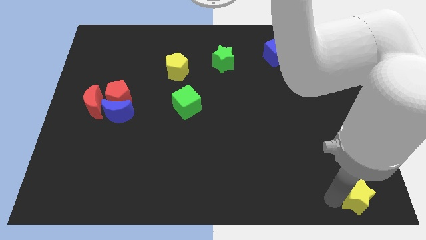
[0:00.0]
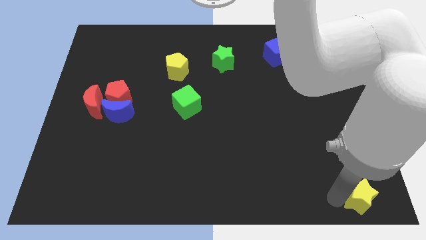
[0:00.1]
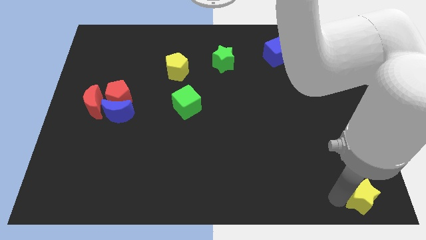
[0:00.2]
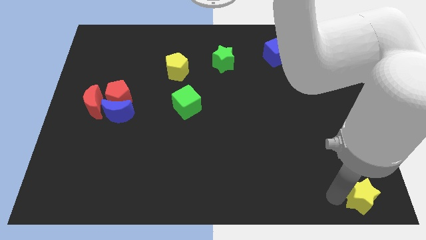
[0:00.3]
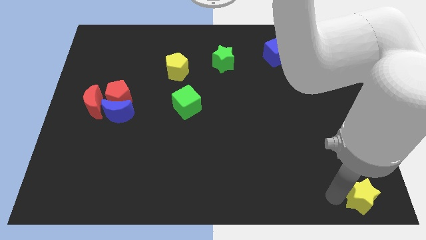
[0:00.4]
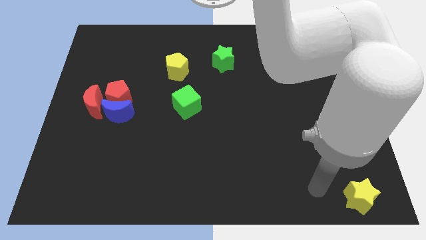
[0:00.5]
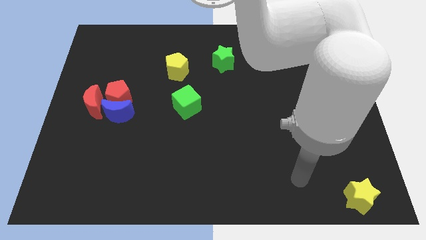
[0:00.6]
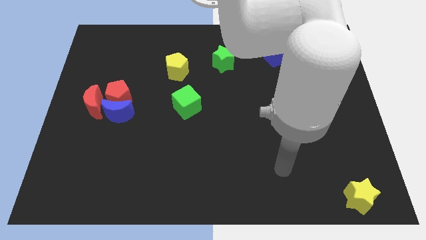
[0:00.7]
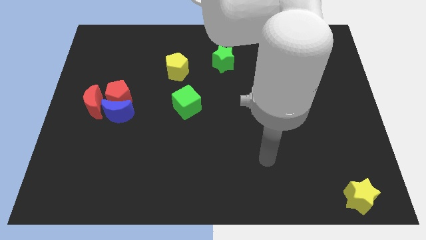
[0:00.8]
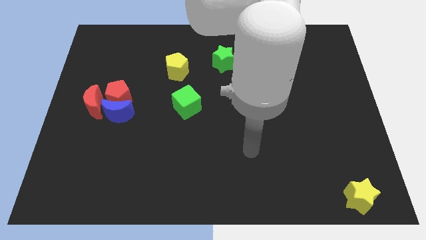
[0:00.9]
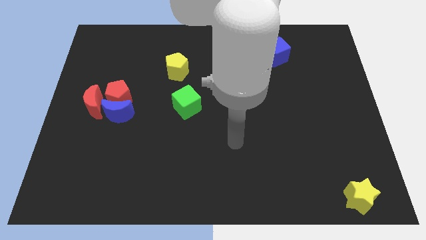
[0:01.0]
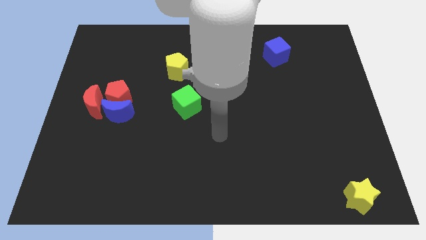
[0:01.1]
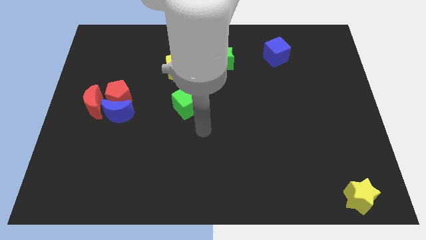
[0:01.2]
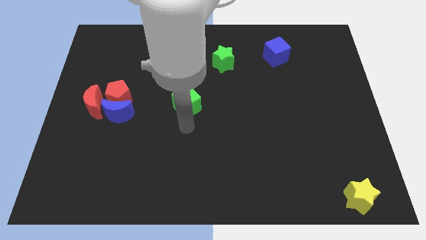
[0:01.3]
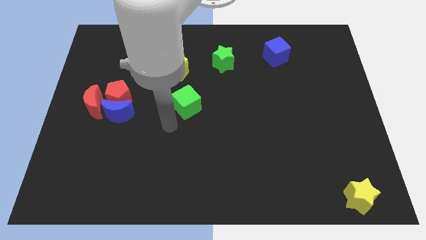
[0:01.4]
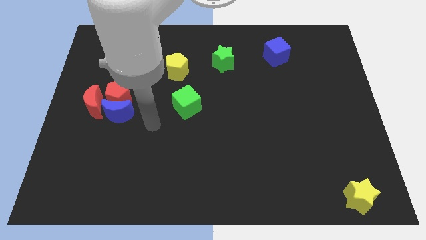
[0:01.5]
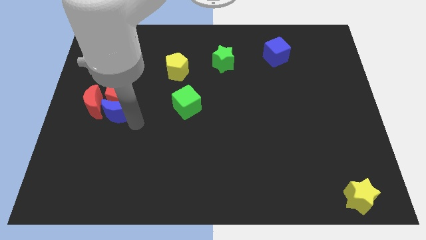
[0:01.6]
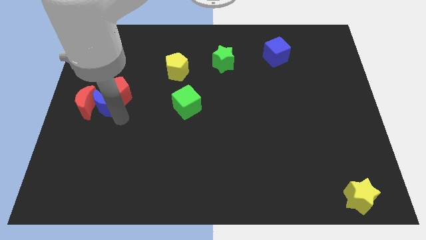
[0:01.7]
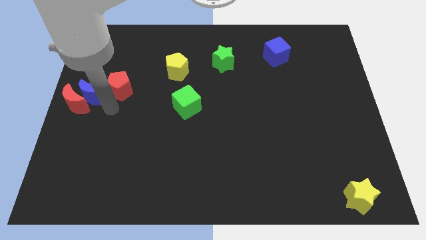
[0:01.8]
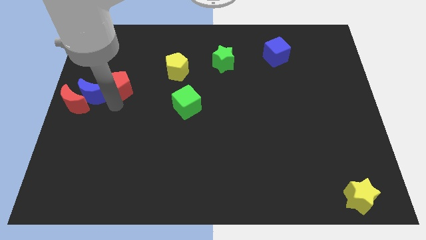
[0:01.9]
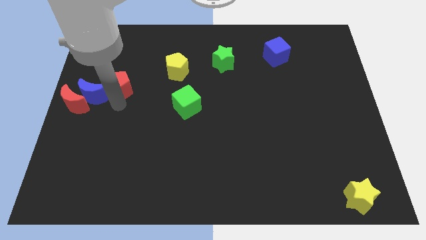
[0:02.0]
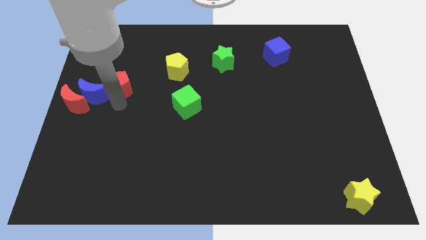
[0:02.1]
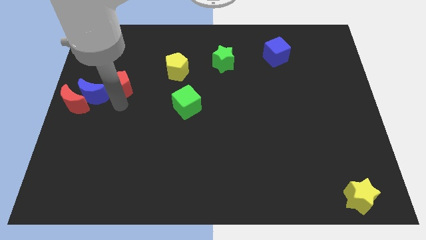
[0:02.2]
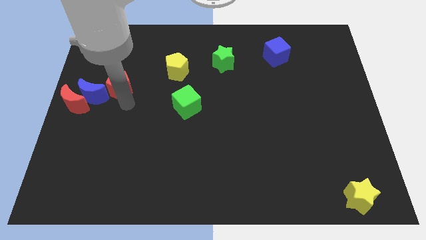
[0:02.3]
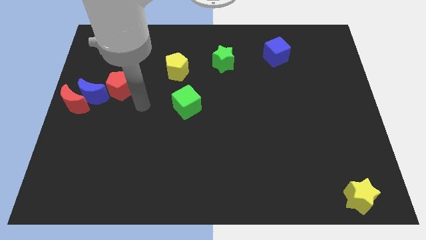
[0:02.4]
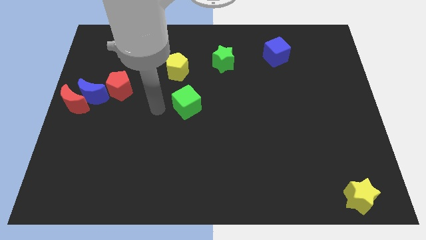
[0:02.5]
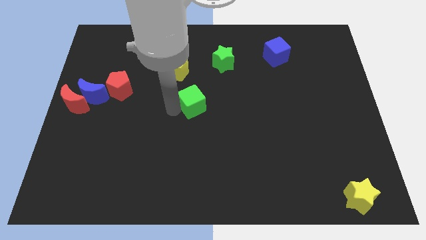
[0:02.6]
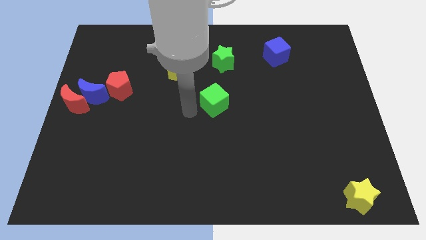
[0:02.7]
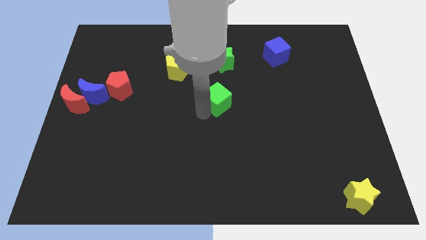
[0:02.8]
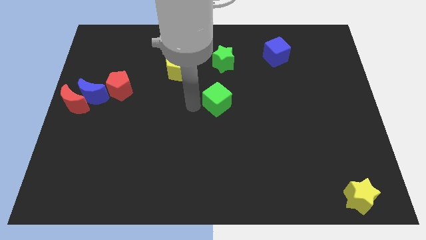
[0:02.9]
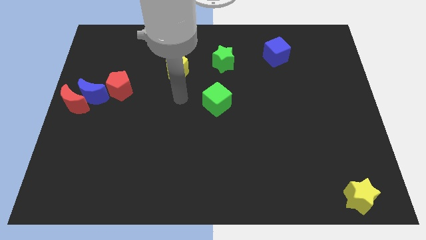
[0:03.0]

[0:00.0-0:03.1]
move the green cube down to the green star

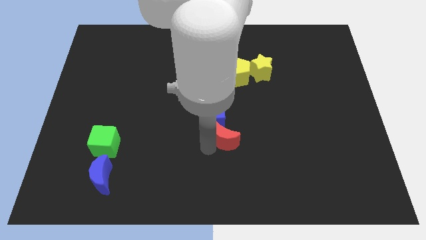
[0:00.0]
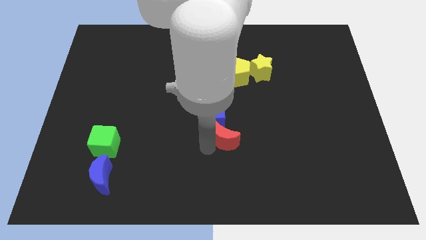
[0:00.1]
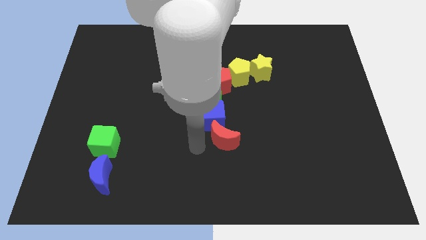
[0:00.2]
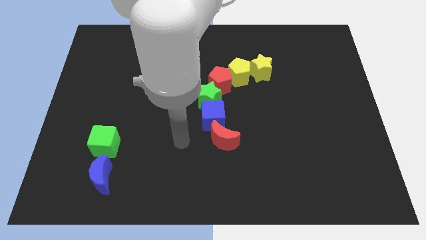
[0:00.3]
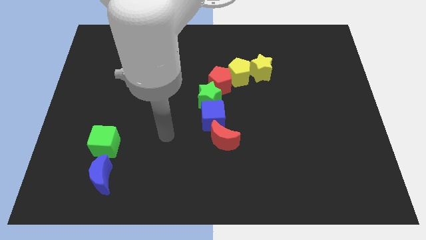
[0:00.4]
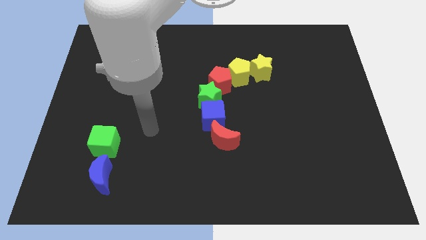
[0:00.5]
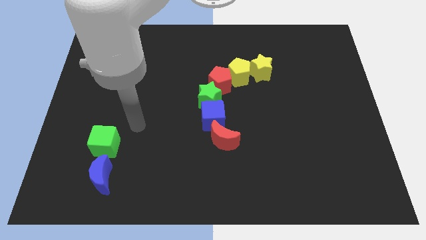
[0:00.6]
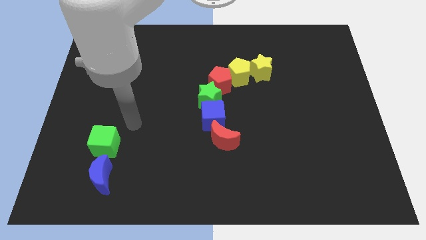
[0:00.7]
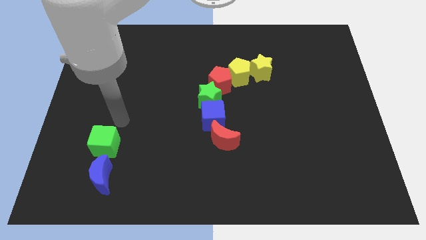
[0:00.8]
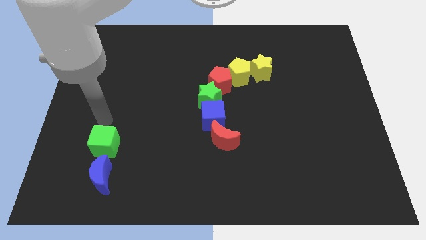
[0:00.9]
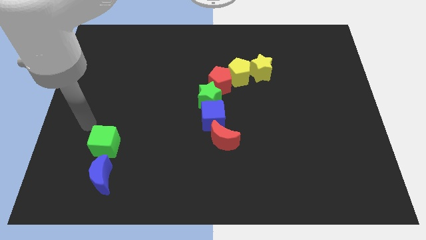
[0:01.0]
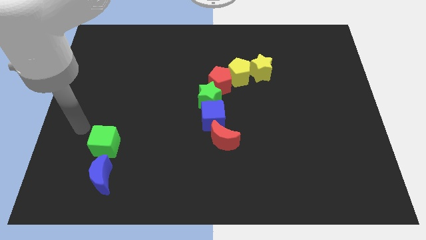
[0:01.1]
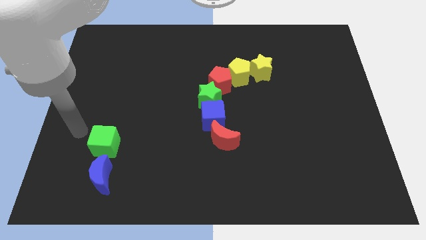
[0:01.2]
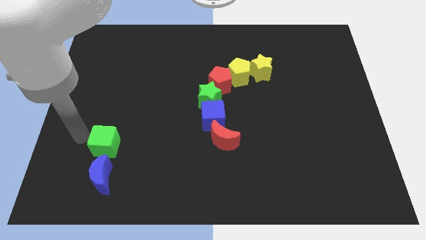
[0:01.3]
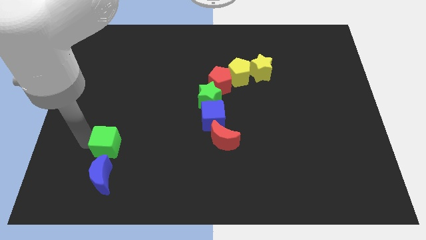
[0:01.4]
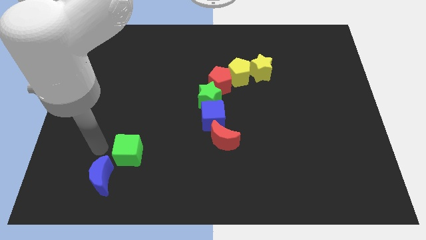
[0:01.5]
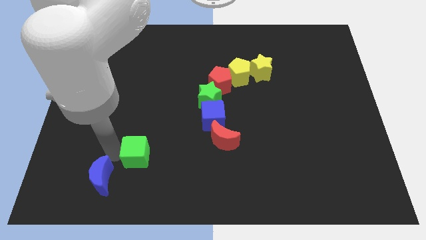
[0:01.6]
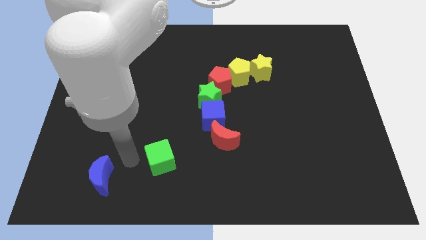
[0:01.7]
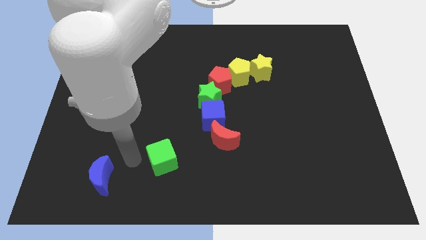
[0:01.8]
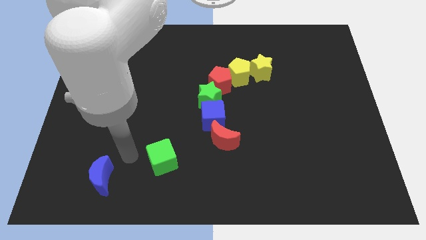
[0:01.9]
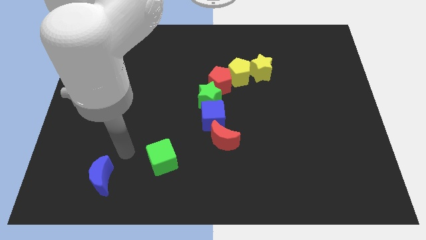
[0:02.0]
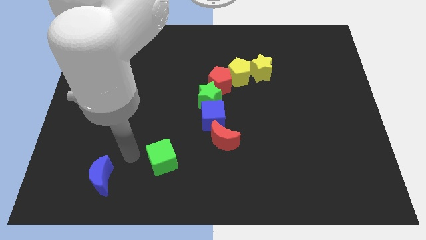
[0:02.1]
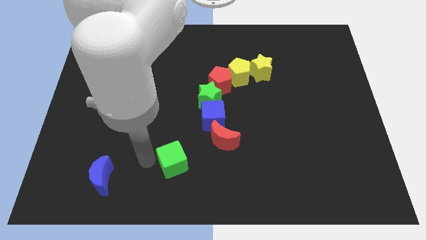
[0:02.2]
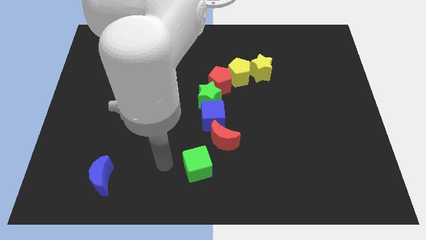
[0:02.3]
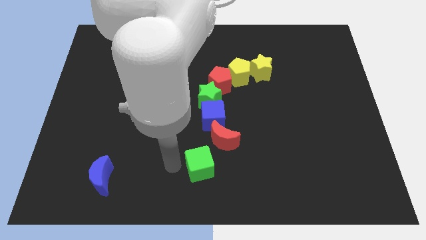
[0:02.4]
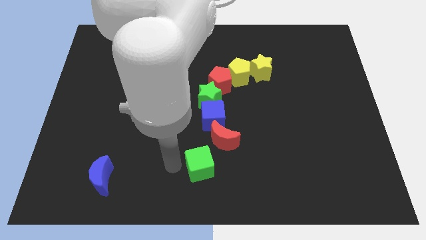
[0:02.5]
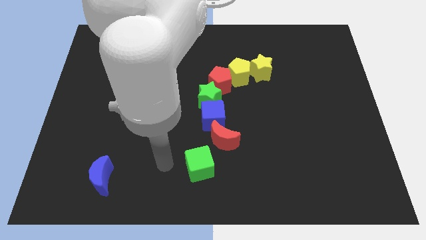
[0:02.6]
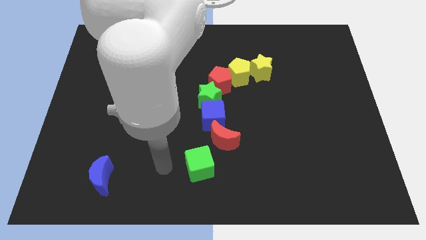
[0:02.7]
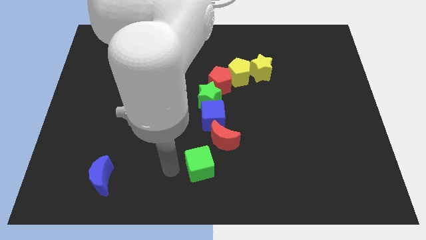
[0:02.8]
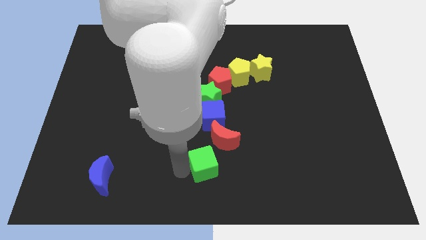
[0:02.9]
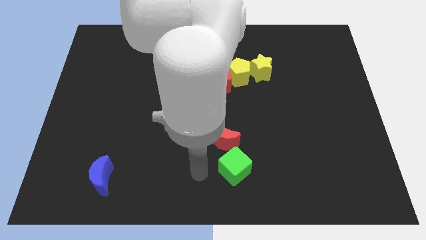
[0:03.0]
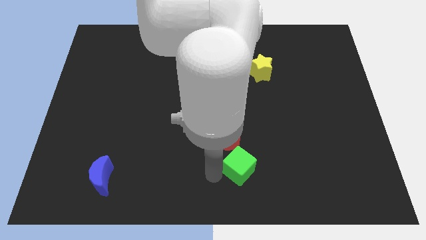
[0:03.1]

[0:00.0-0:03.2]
move the green cube below the red moon

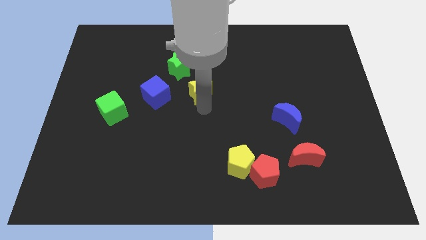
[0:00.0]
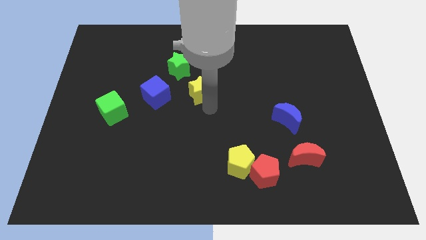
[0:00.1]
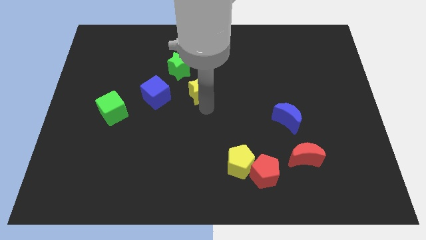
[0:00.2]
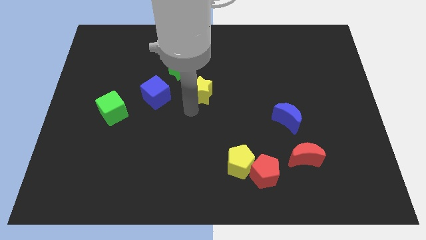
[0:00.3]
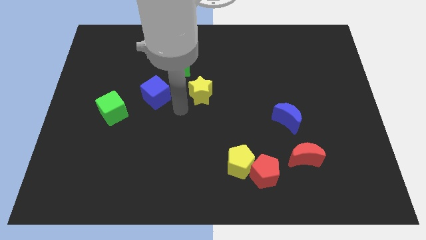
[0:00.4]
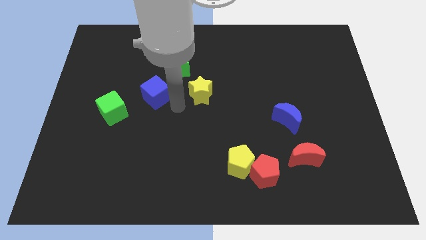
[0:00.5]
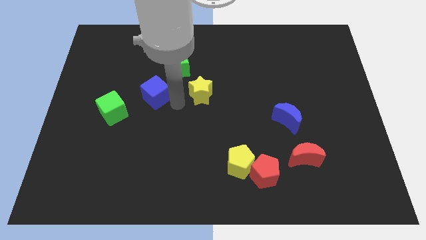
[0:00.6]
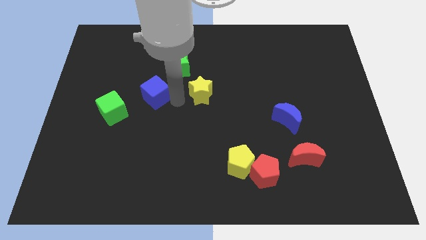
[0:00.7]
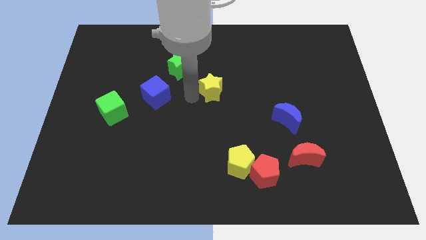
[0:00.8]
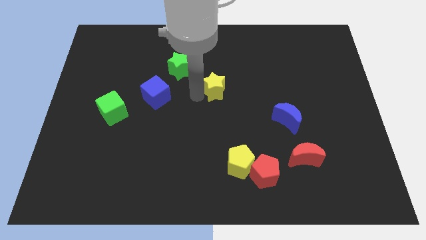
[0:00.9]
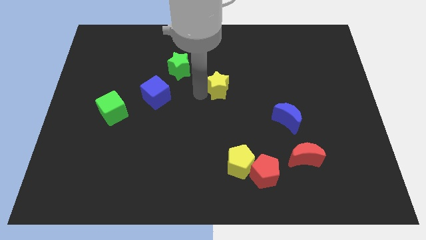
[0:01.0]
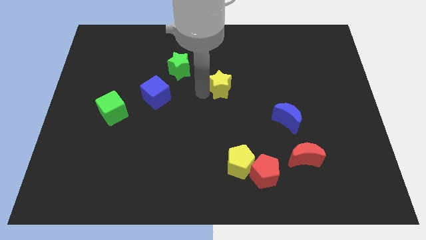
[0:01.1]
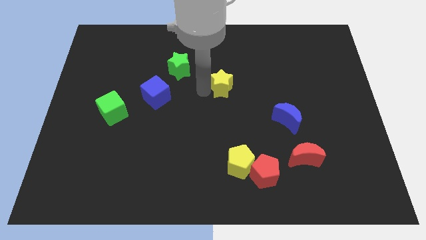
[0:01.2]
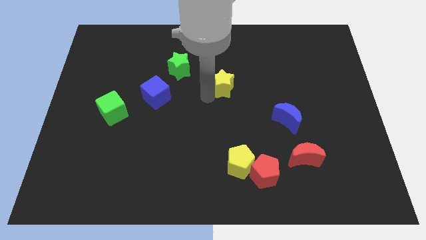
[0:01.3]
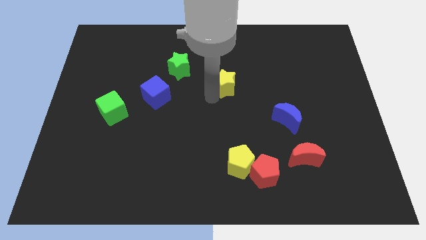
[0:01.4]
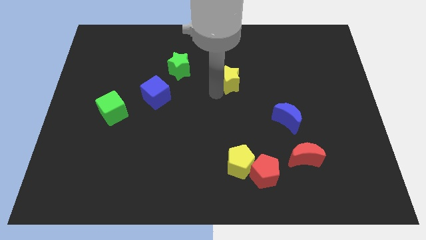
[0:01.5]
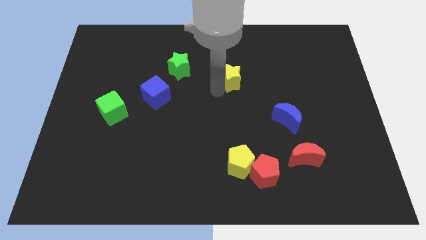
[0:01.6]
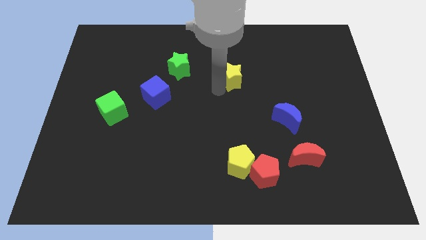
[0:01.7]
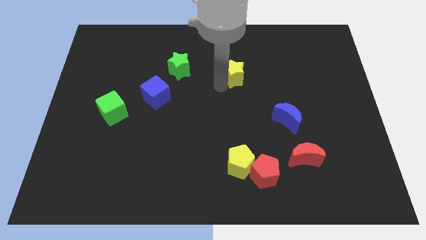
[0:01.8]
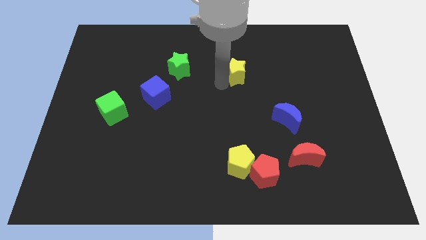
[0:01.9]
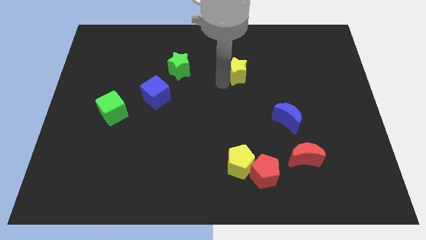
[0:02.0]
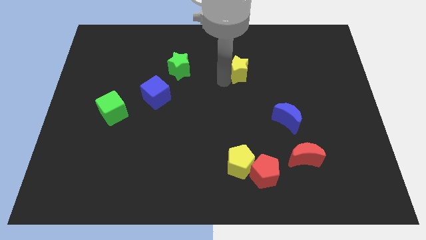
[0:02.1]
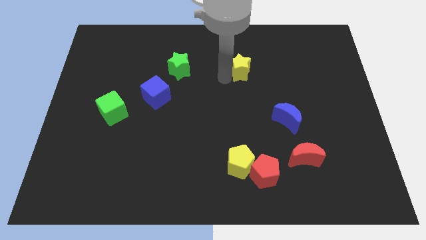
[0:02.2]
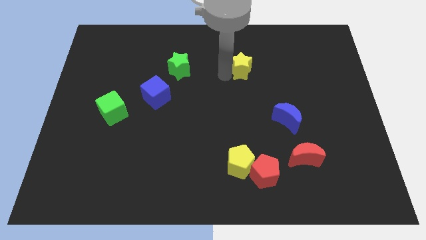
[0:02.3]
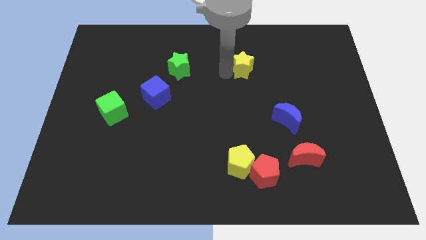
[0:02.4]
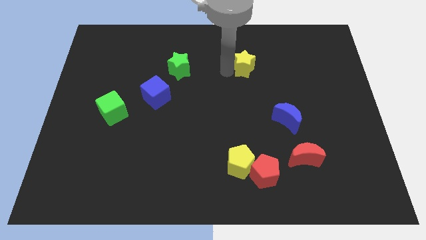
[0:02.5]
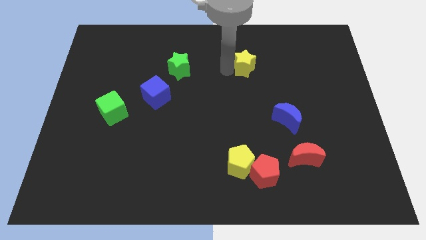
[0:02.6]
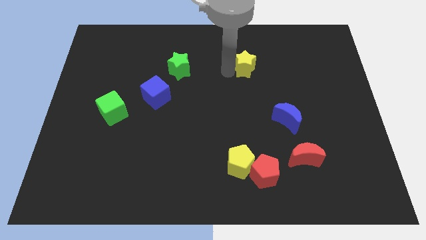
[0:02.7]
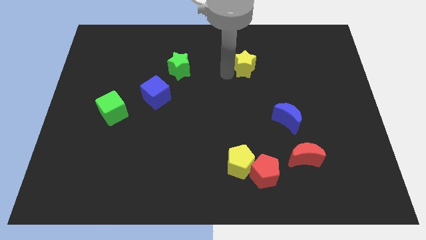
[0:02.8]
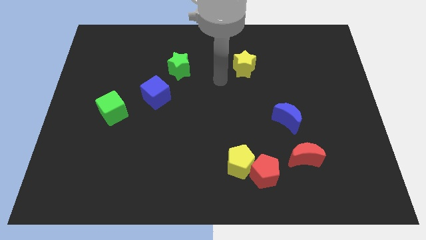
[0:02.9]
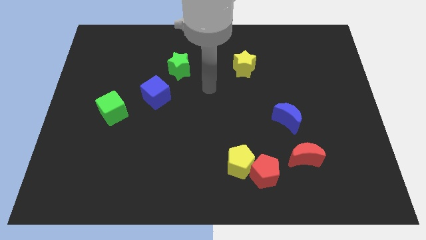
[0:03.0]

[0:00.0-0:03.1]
move the yellow star horizontally to the right of the green star
